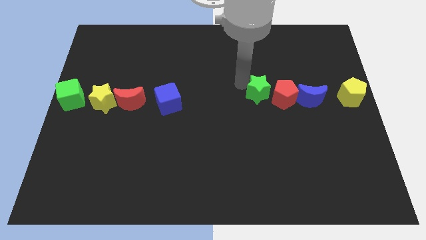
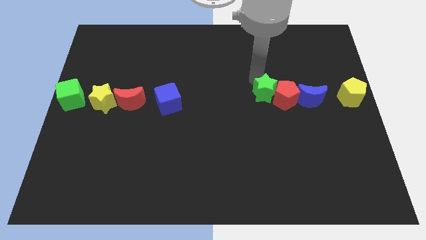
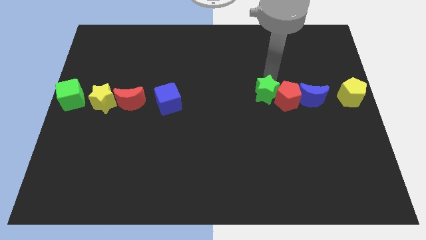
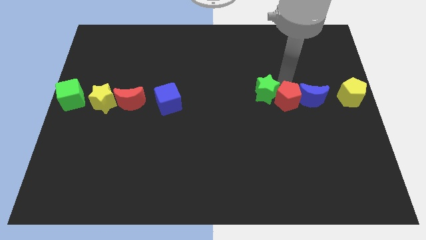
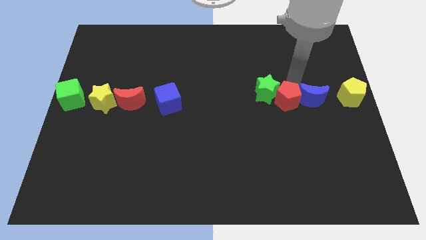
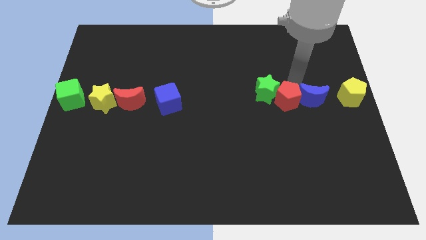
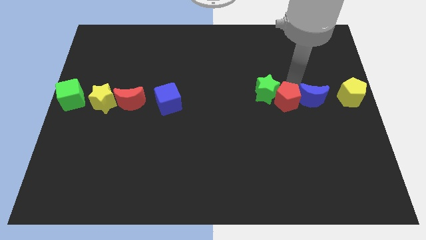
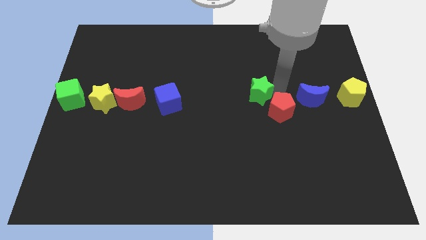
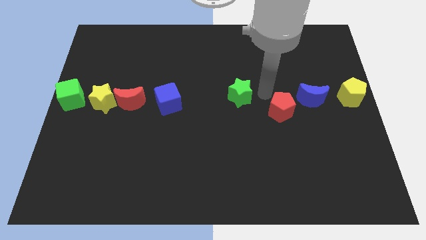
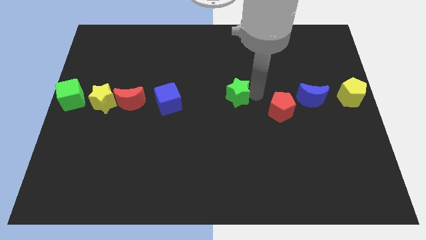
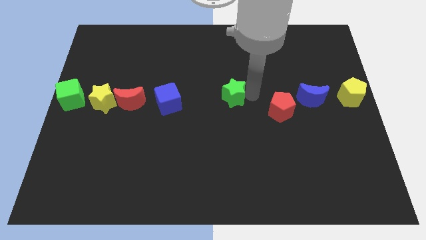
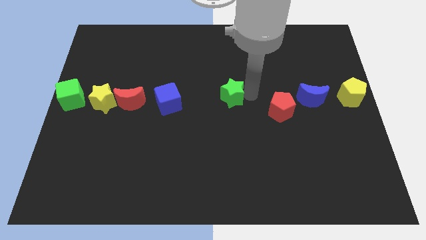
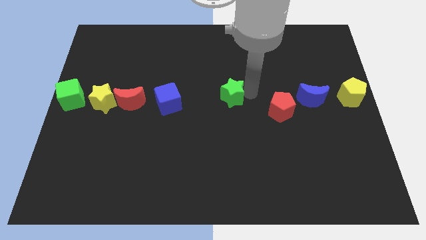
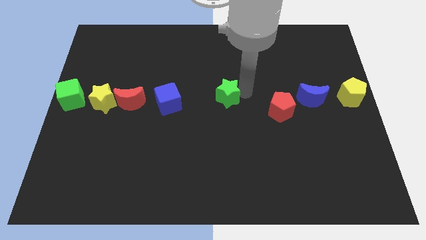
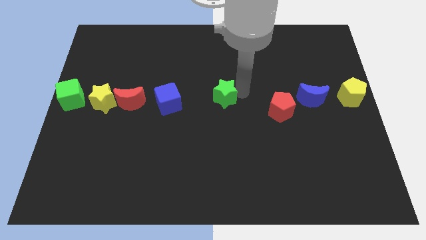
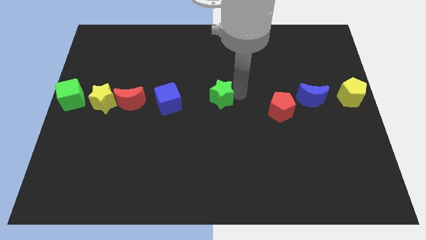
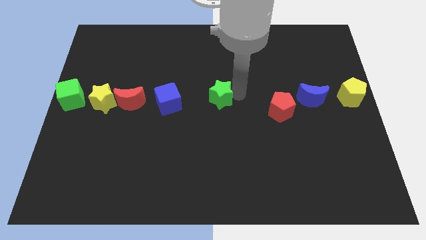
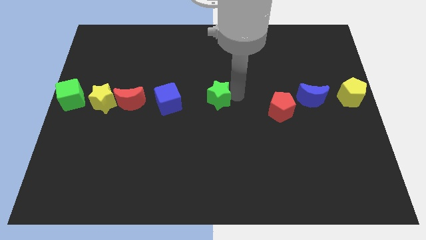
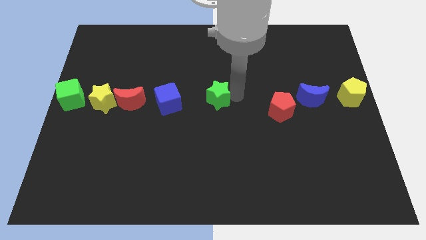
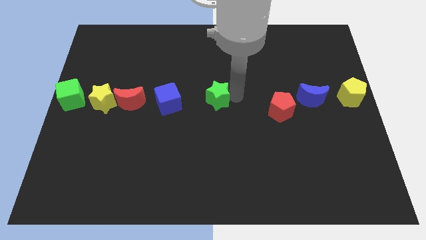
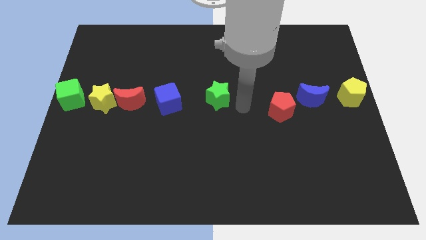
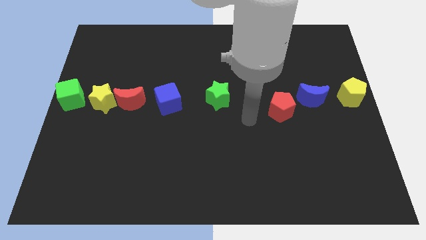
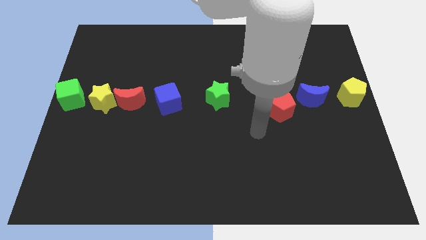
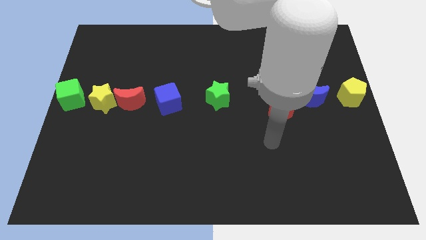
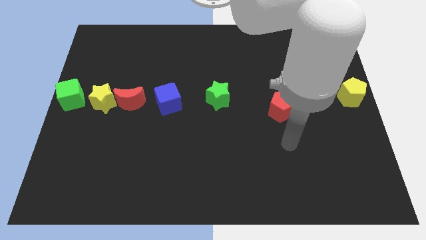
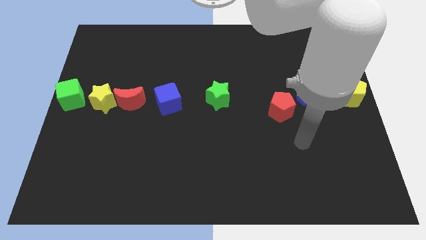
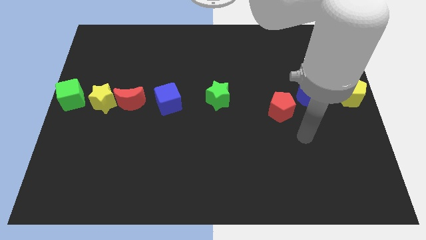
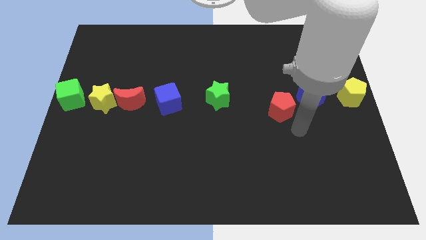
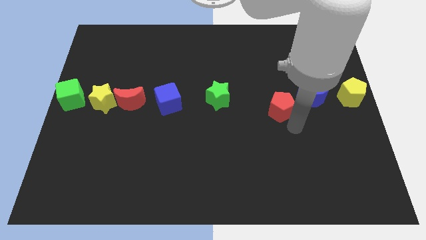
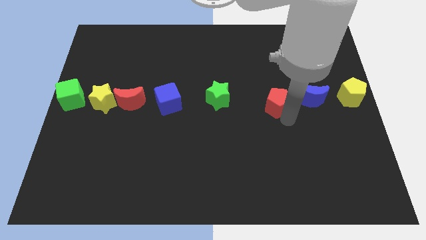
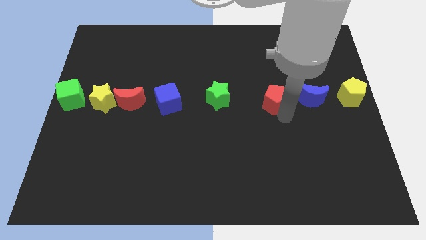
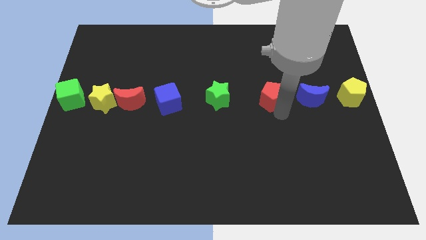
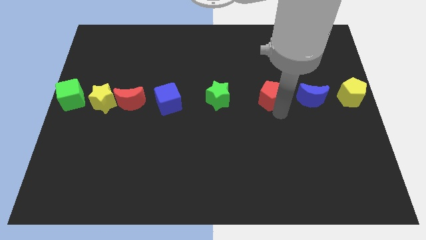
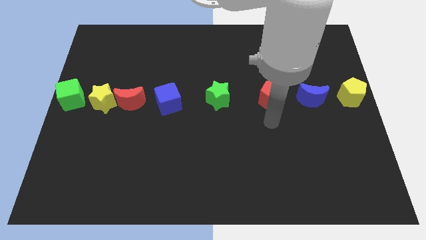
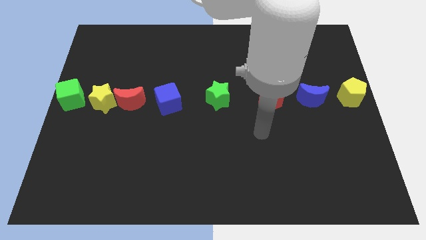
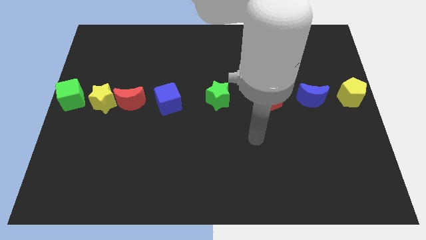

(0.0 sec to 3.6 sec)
push the green star to the center of the board

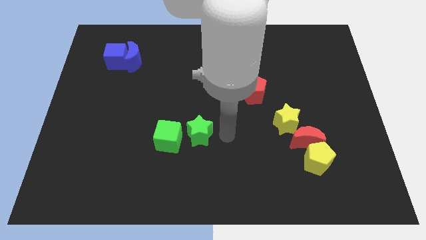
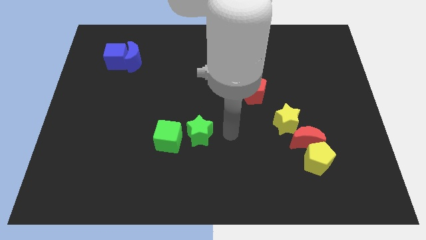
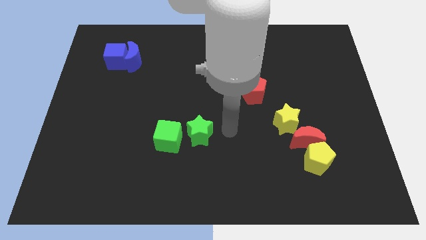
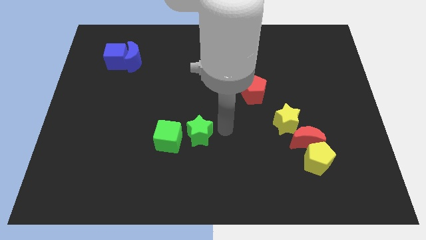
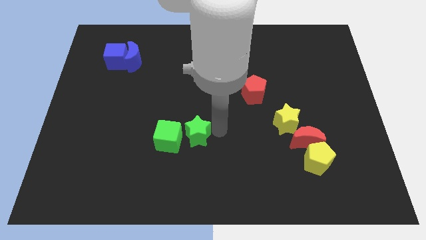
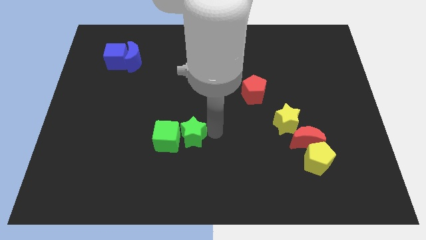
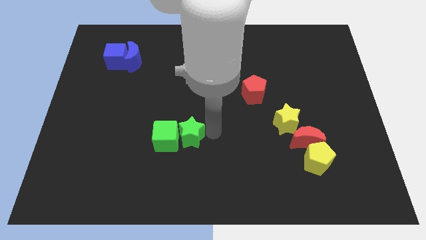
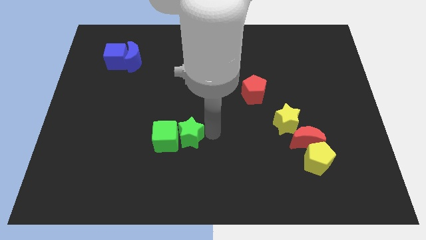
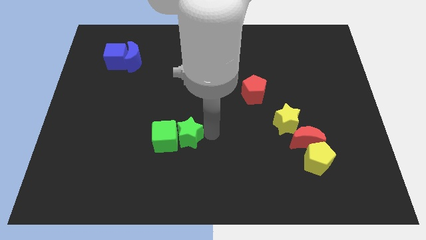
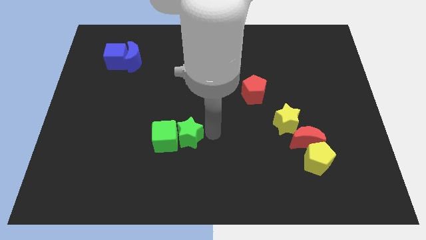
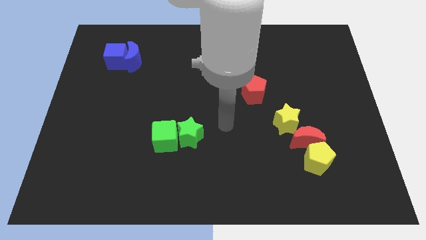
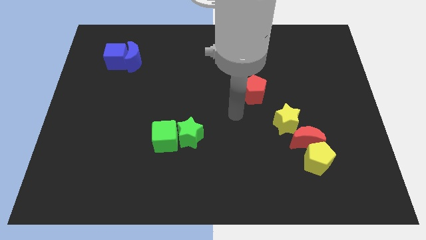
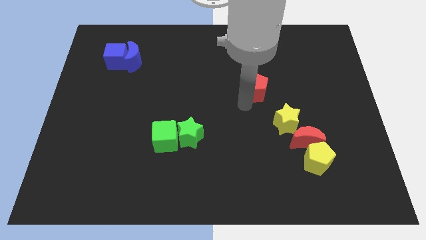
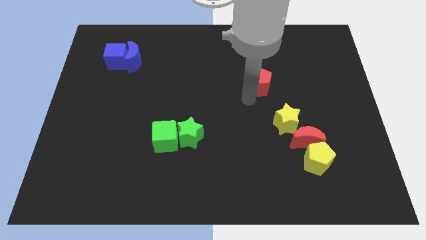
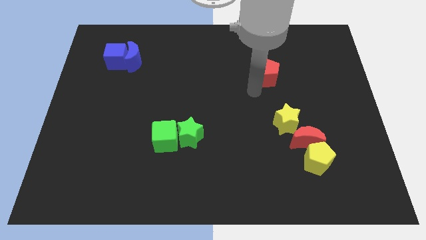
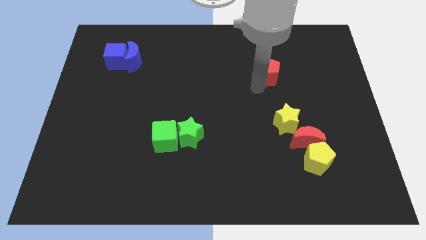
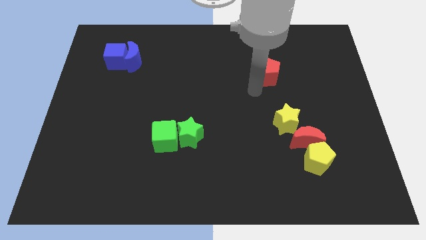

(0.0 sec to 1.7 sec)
push green star into green cube

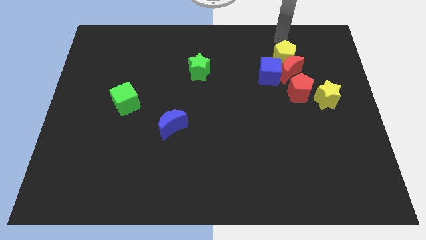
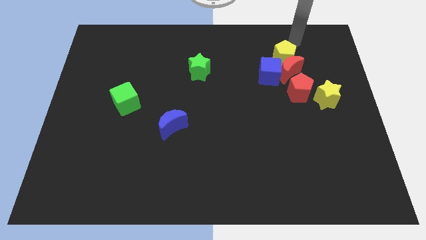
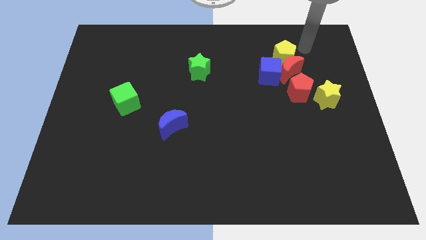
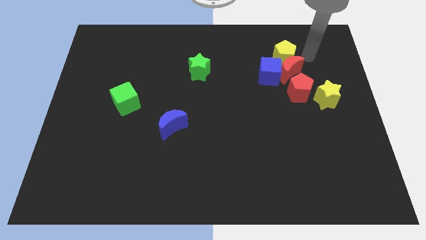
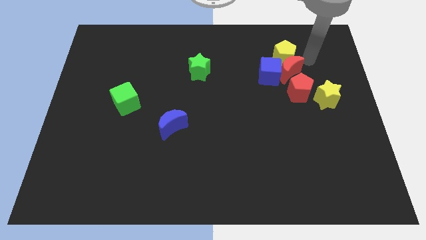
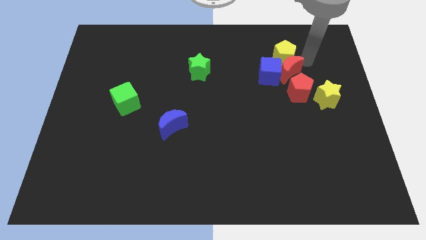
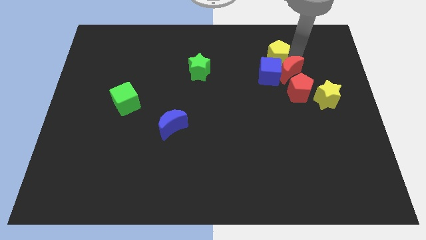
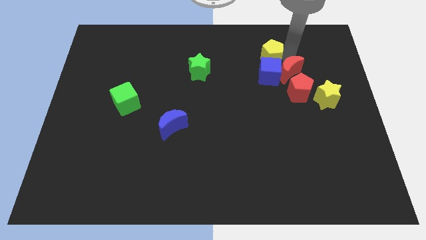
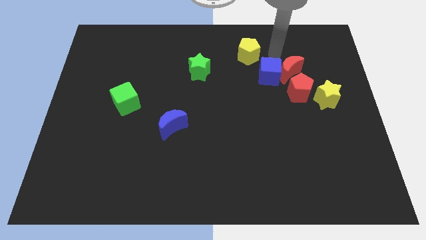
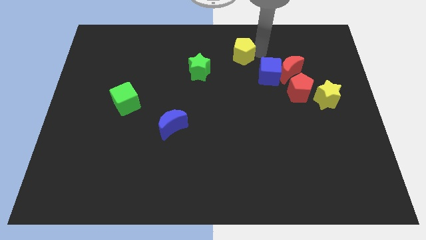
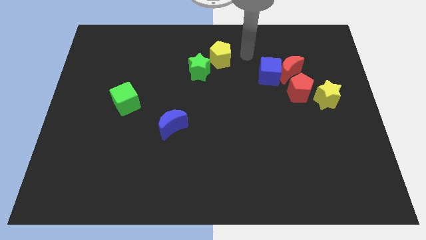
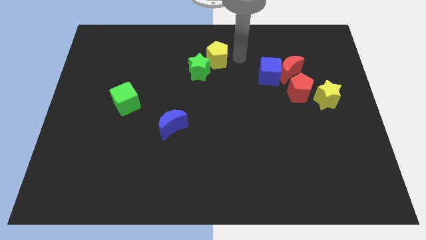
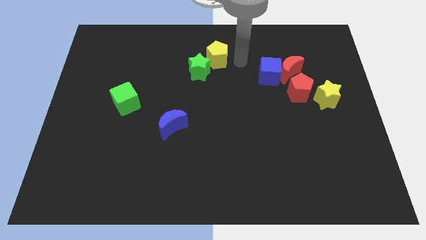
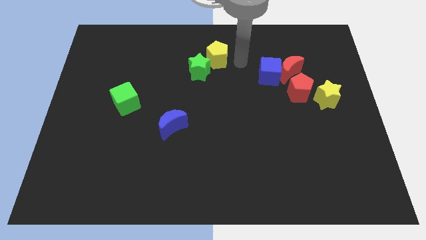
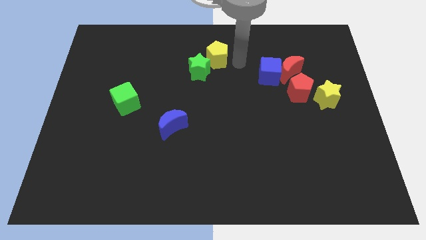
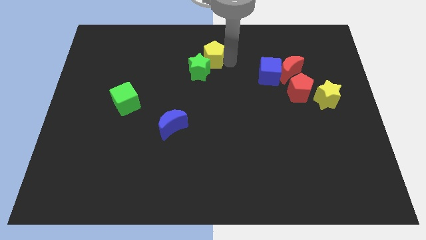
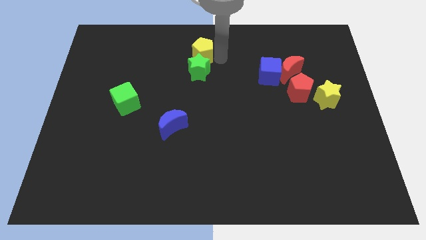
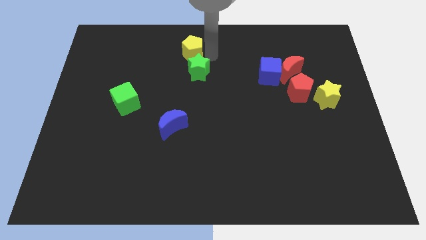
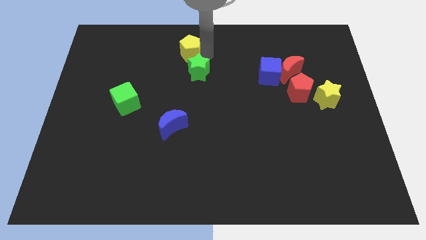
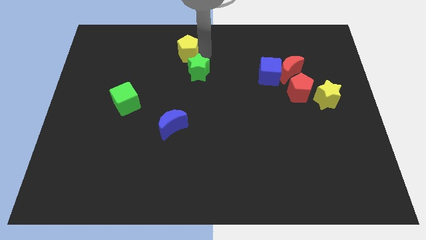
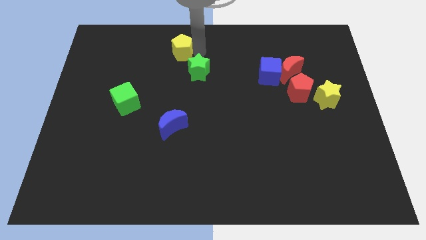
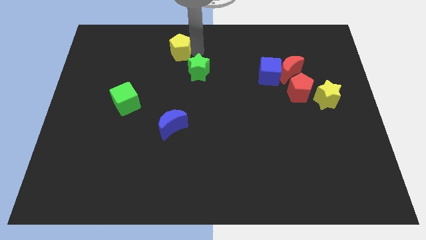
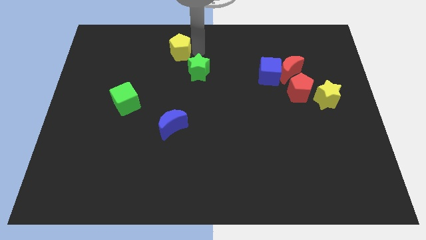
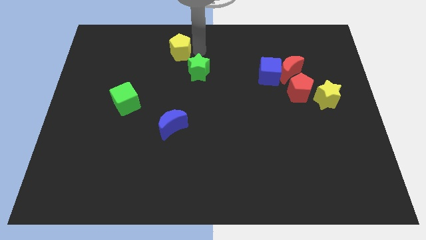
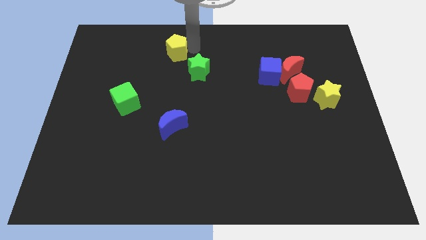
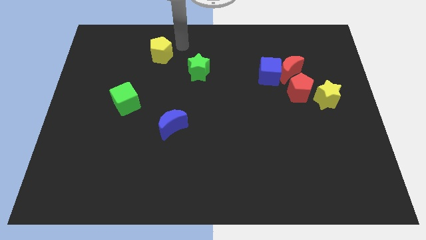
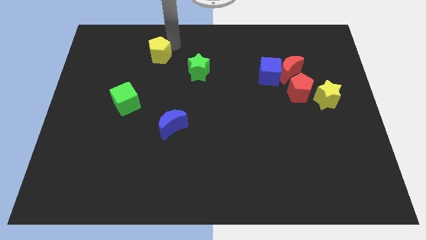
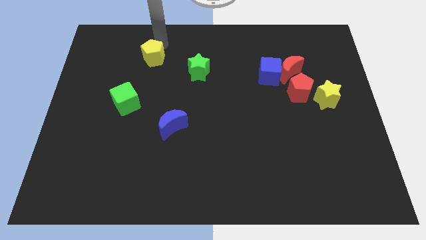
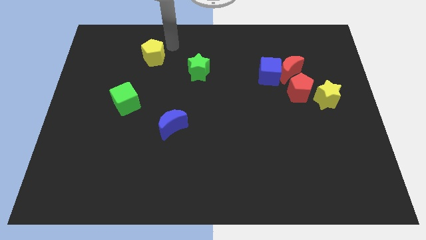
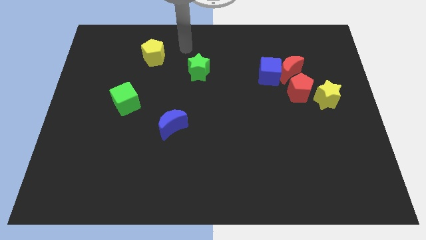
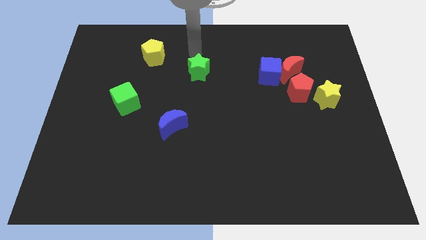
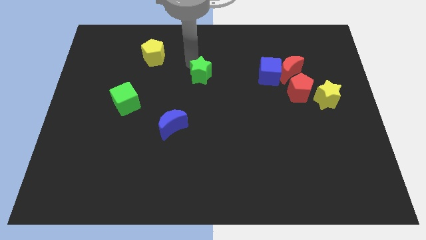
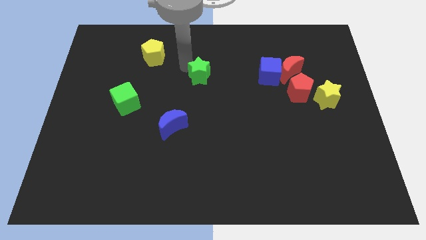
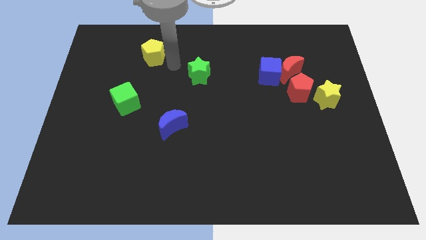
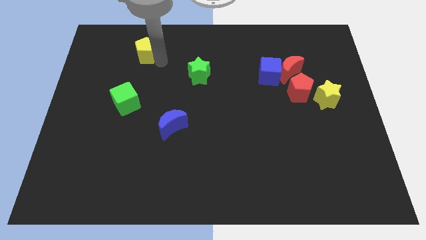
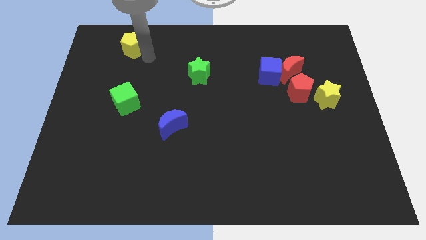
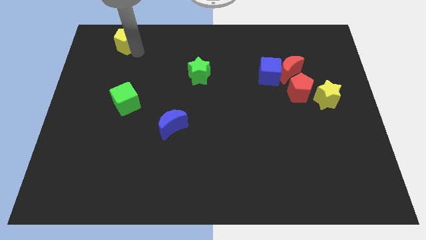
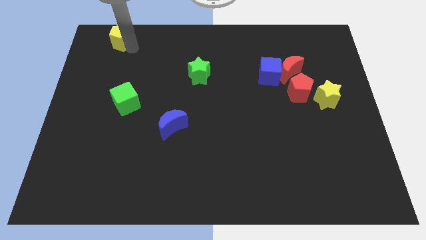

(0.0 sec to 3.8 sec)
push the yellow pentagon towards the top left side of the board
